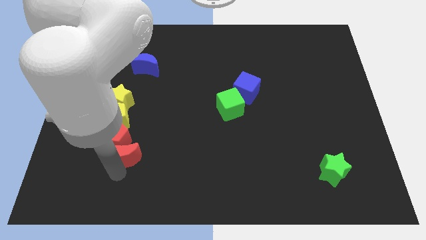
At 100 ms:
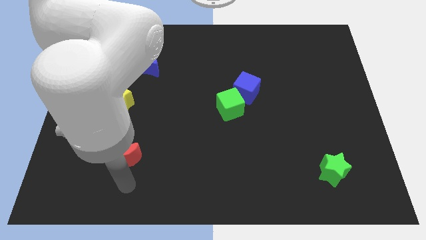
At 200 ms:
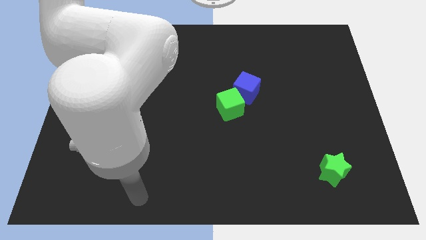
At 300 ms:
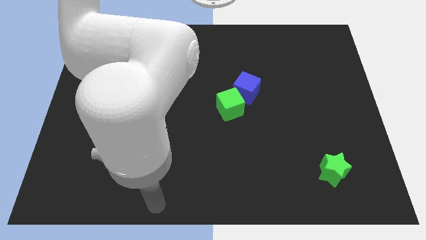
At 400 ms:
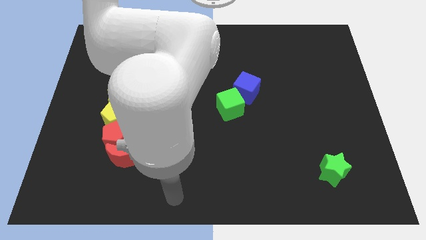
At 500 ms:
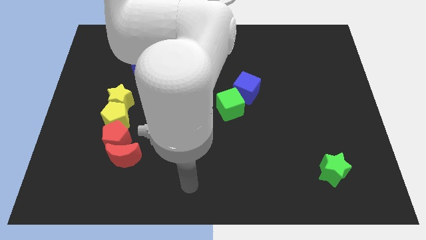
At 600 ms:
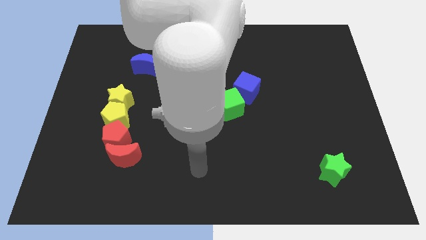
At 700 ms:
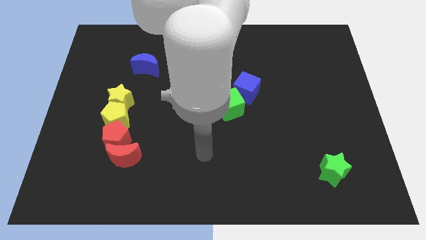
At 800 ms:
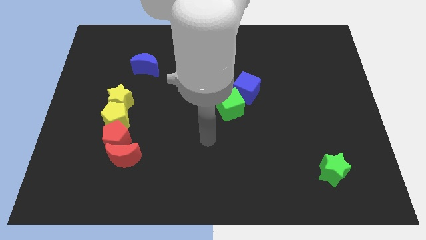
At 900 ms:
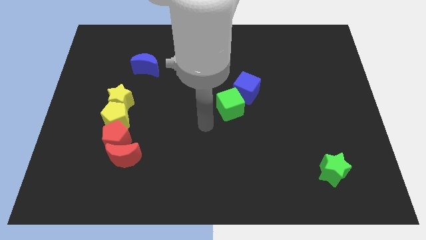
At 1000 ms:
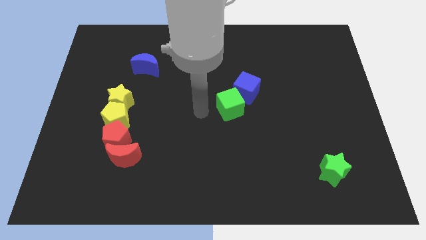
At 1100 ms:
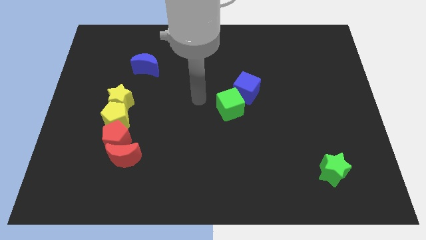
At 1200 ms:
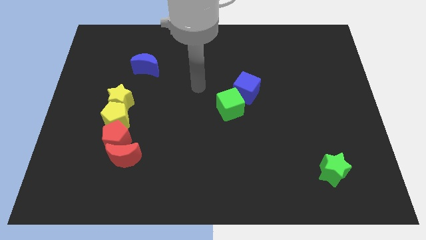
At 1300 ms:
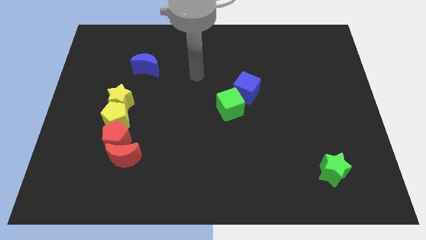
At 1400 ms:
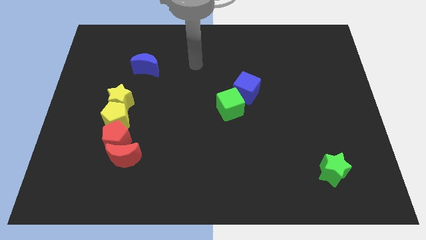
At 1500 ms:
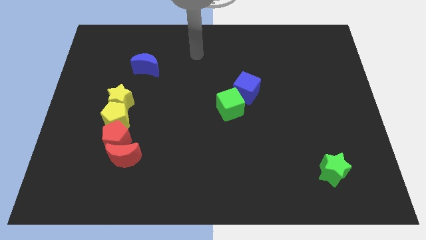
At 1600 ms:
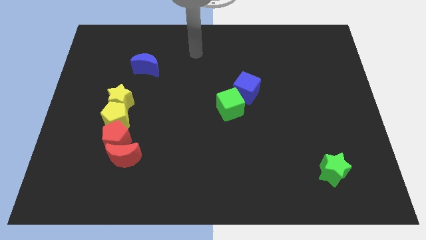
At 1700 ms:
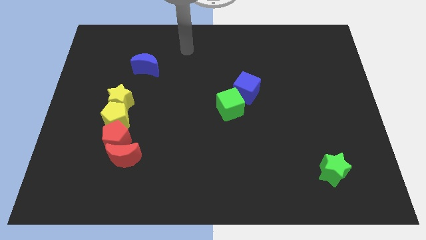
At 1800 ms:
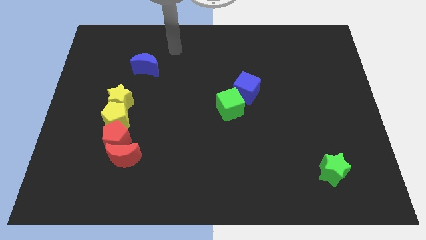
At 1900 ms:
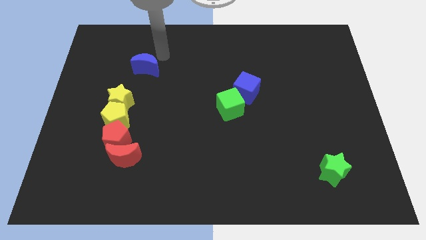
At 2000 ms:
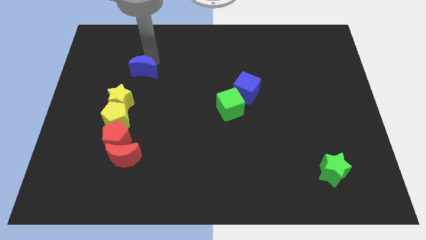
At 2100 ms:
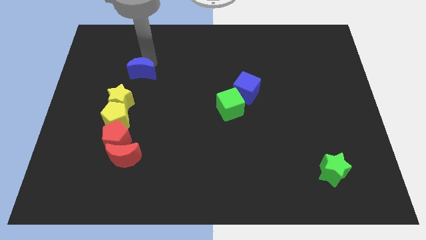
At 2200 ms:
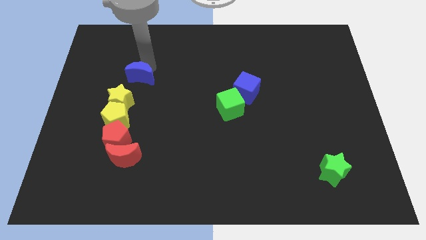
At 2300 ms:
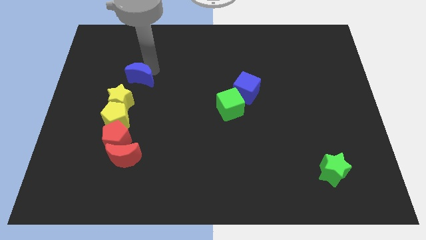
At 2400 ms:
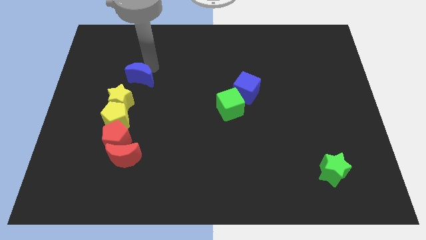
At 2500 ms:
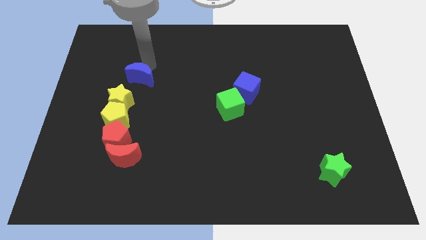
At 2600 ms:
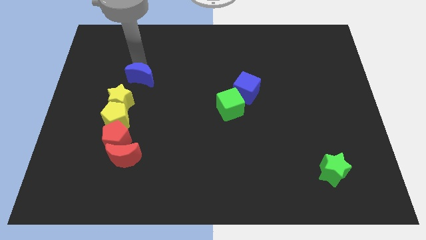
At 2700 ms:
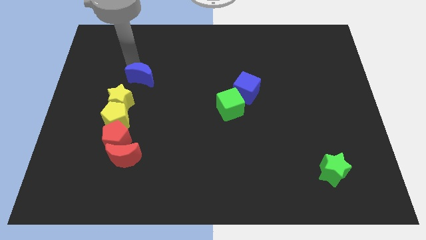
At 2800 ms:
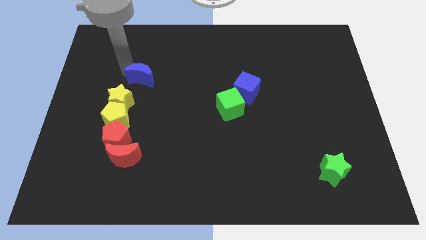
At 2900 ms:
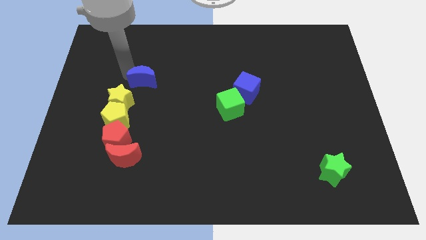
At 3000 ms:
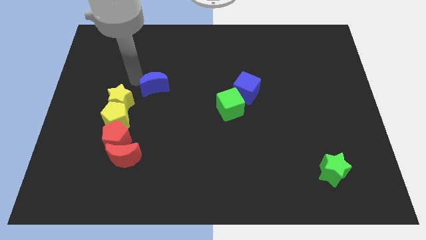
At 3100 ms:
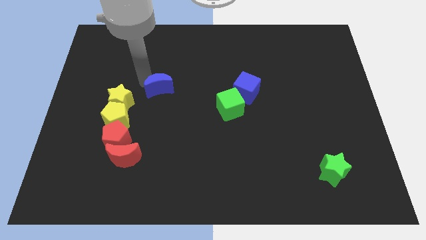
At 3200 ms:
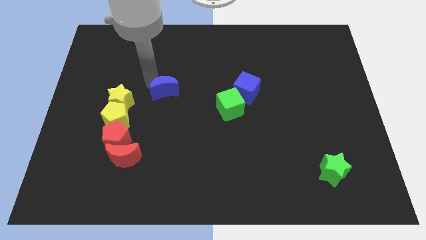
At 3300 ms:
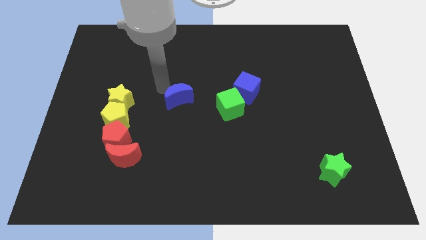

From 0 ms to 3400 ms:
push the blue moon towards the center of the board

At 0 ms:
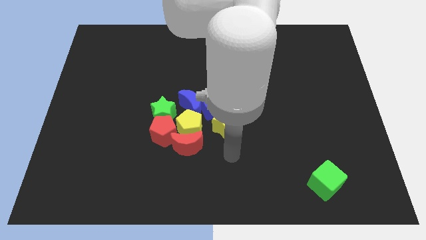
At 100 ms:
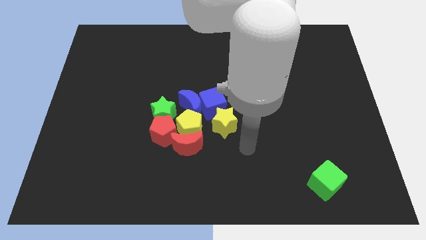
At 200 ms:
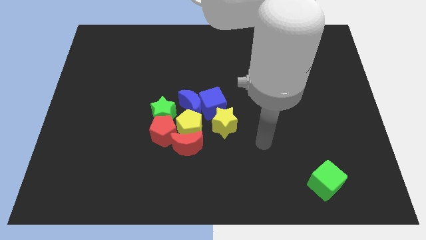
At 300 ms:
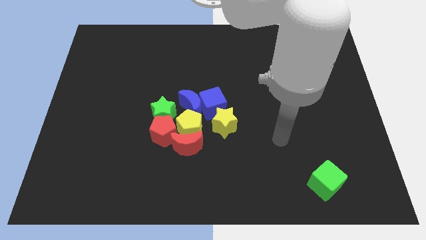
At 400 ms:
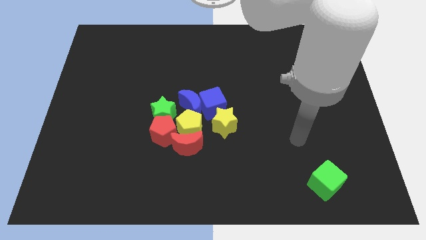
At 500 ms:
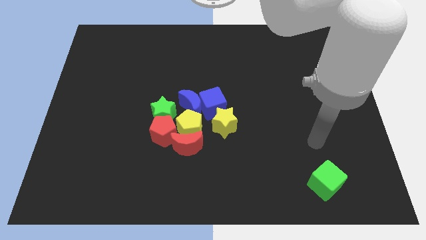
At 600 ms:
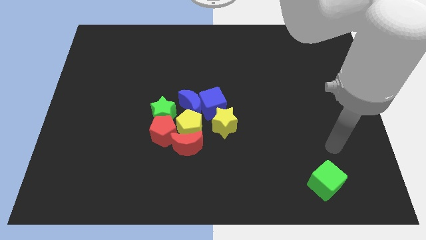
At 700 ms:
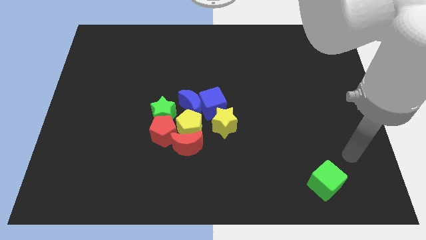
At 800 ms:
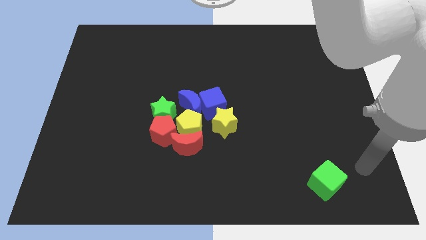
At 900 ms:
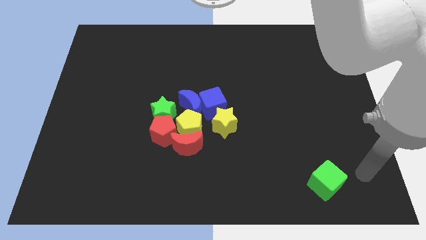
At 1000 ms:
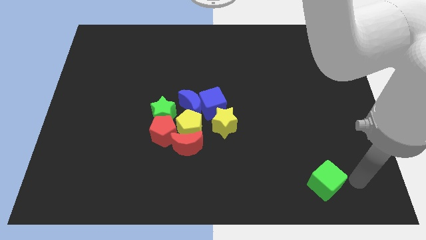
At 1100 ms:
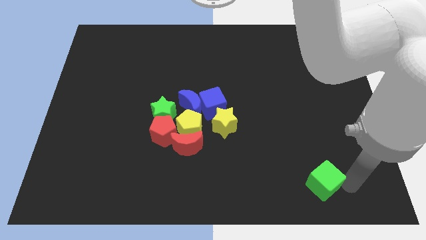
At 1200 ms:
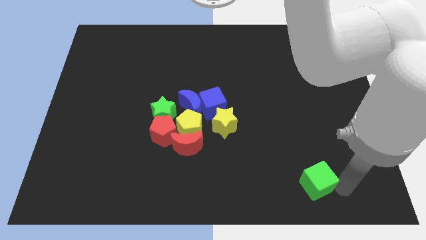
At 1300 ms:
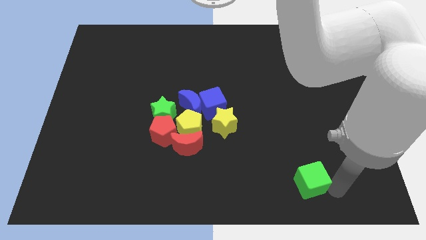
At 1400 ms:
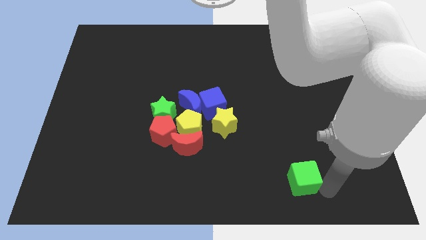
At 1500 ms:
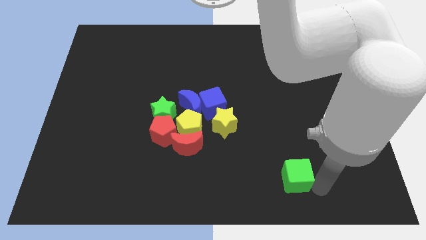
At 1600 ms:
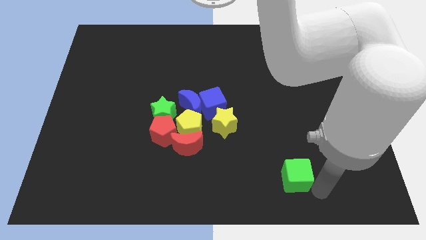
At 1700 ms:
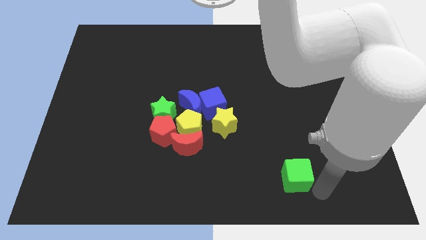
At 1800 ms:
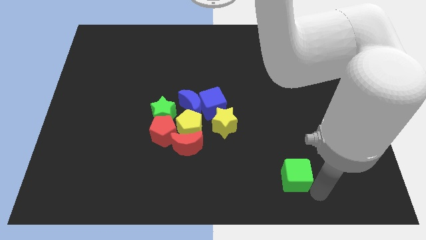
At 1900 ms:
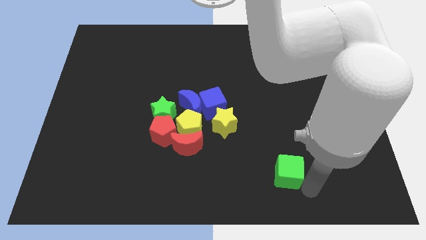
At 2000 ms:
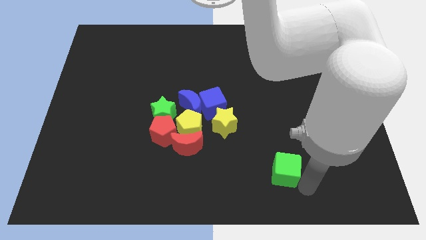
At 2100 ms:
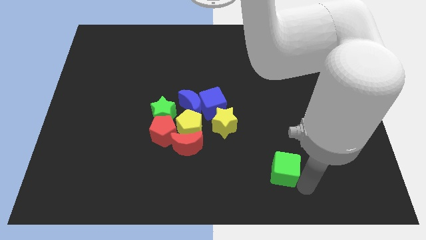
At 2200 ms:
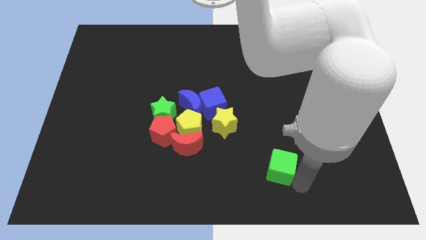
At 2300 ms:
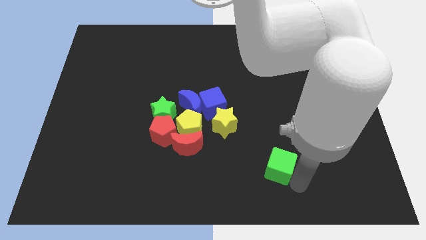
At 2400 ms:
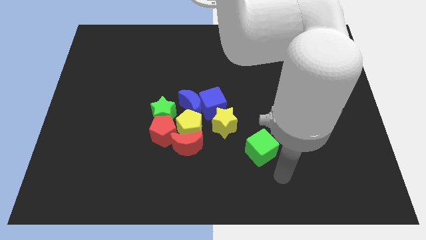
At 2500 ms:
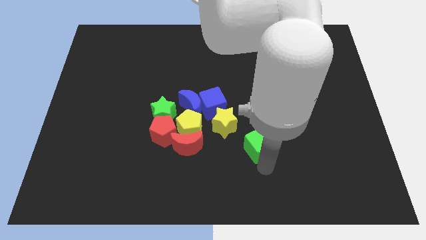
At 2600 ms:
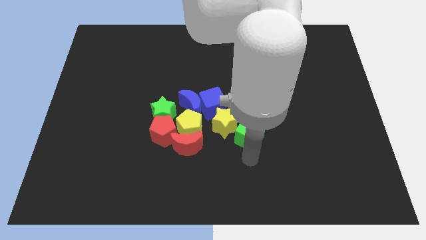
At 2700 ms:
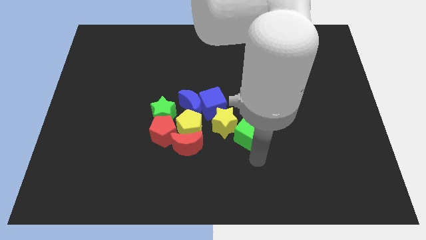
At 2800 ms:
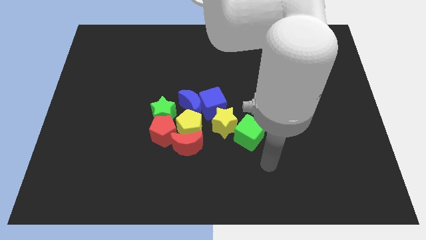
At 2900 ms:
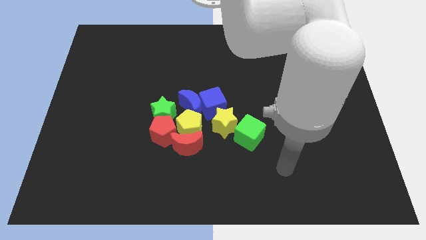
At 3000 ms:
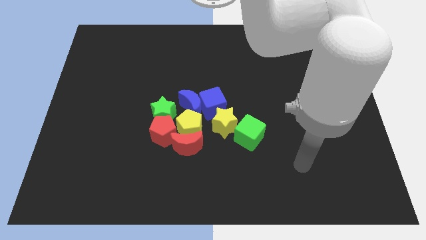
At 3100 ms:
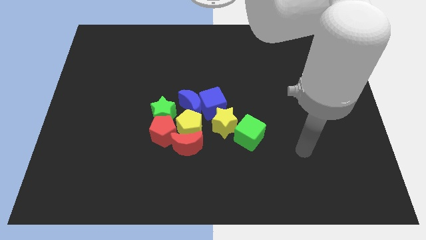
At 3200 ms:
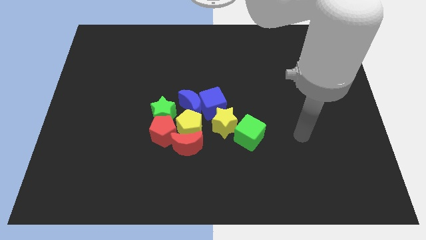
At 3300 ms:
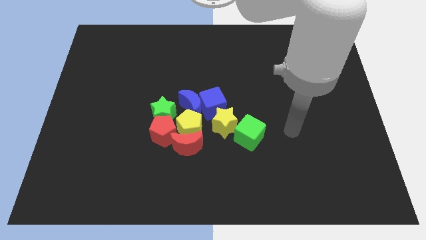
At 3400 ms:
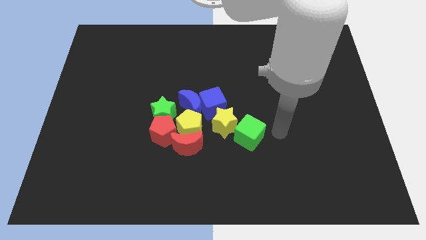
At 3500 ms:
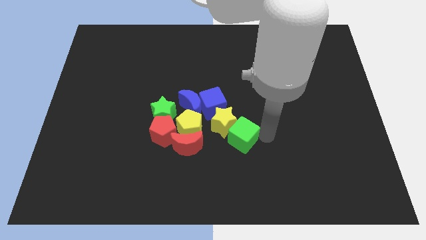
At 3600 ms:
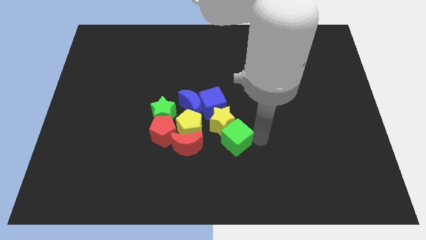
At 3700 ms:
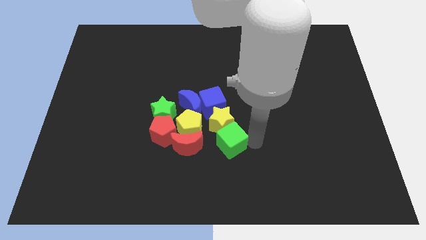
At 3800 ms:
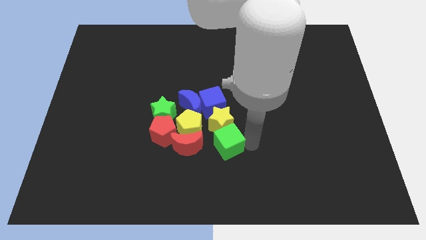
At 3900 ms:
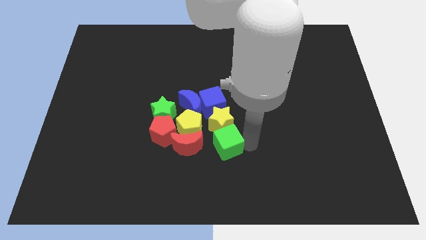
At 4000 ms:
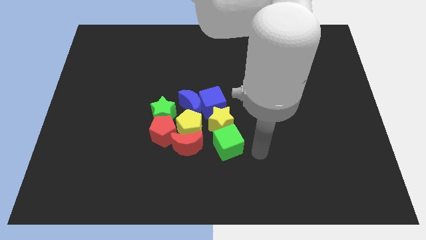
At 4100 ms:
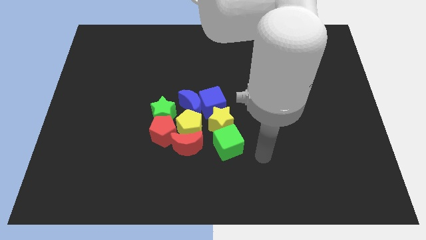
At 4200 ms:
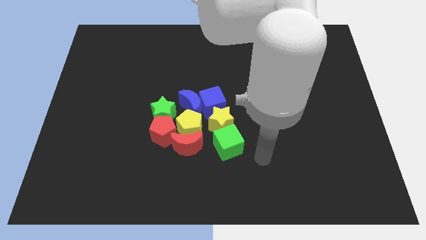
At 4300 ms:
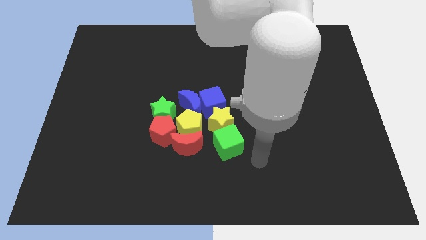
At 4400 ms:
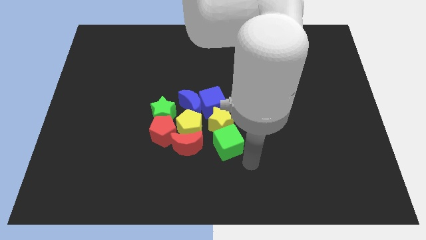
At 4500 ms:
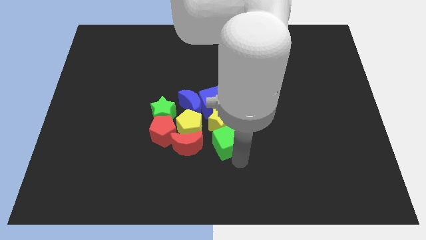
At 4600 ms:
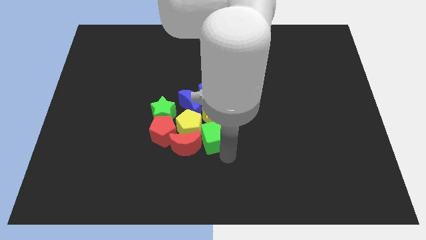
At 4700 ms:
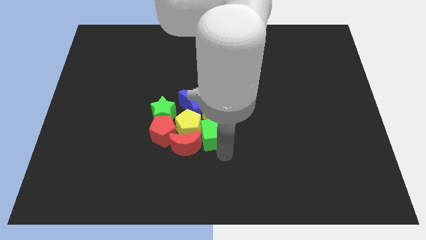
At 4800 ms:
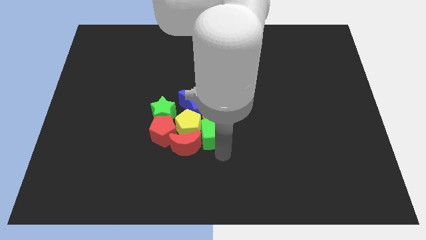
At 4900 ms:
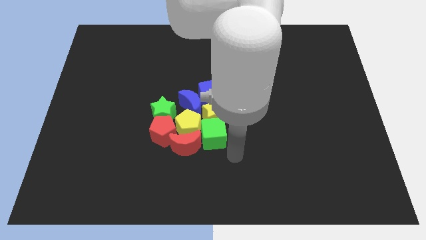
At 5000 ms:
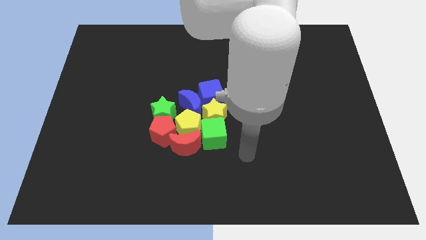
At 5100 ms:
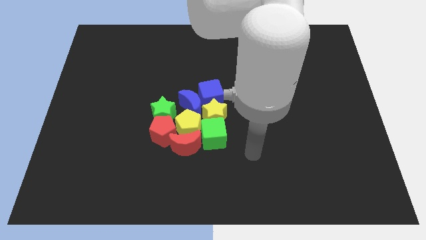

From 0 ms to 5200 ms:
slide the green cube into the group of blocks

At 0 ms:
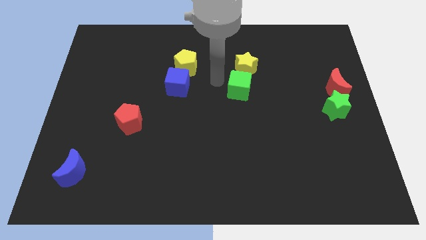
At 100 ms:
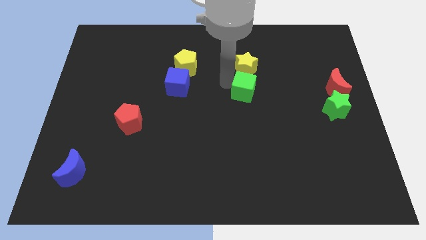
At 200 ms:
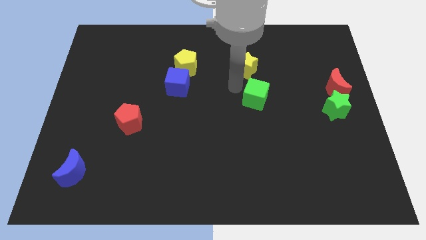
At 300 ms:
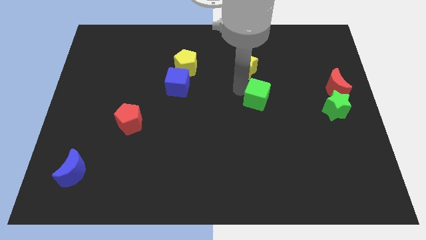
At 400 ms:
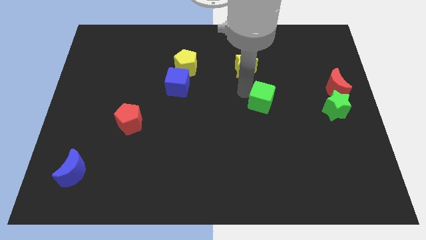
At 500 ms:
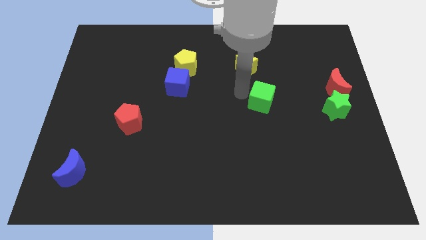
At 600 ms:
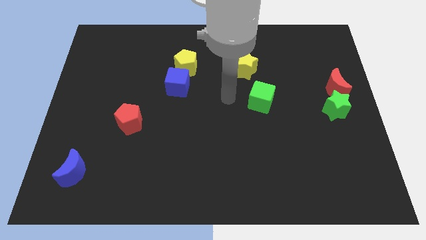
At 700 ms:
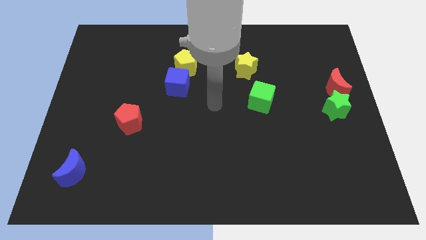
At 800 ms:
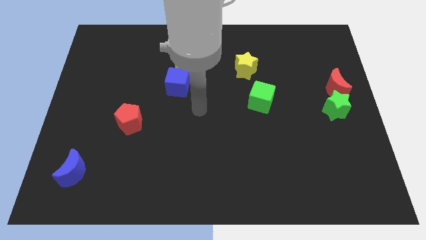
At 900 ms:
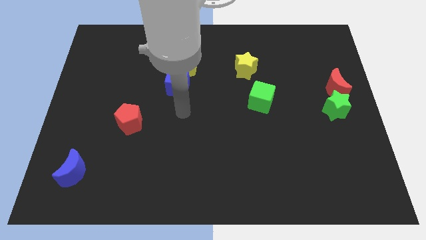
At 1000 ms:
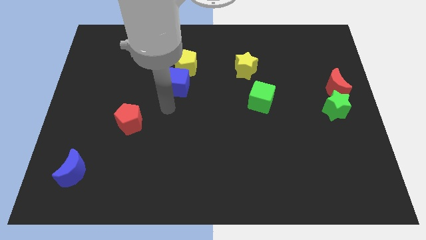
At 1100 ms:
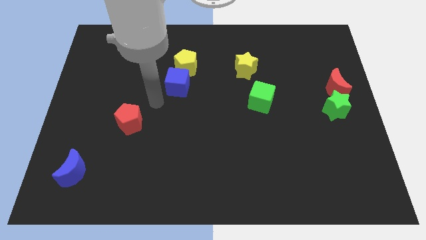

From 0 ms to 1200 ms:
separate the green cube and the yellow star
